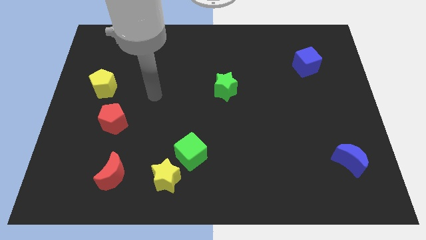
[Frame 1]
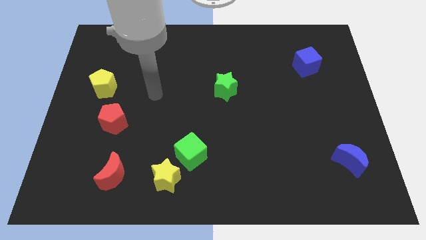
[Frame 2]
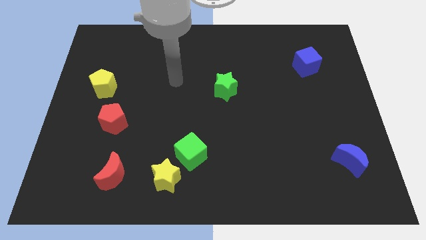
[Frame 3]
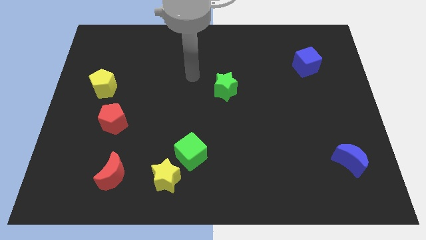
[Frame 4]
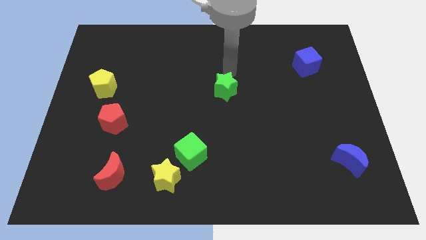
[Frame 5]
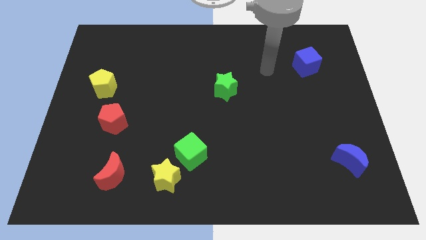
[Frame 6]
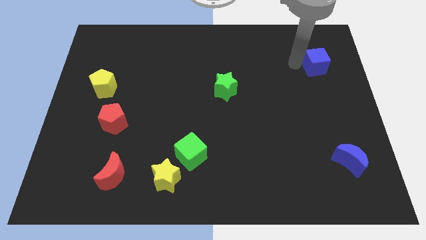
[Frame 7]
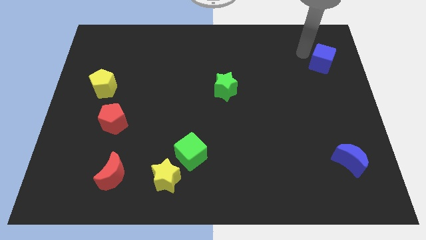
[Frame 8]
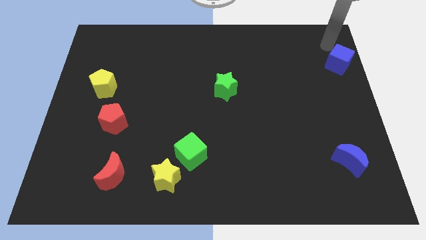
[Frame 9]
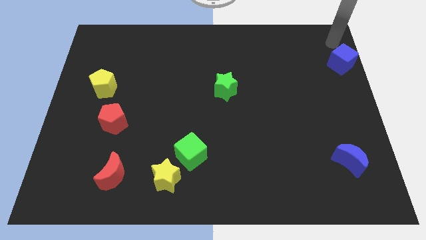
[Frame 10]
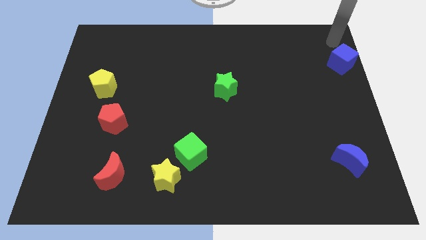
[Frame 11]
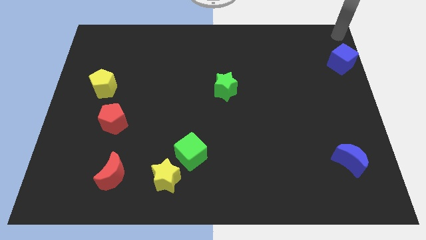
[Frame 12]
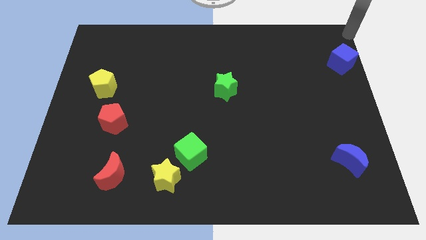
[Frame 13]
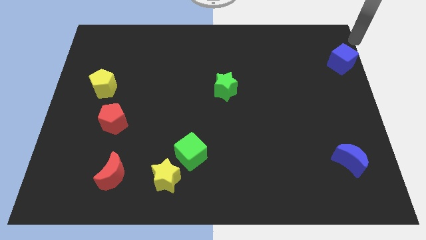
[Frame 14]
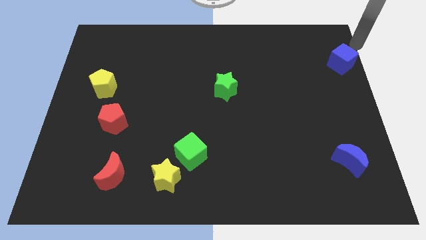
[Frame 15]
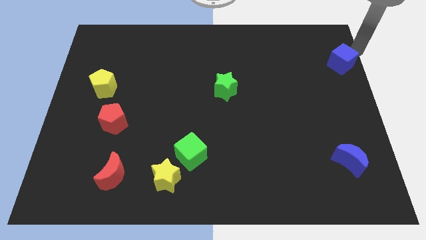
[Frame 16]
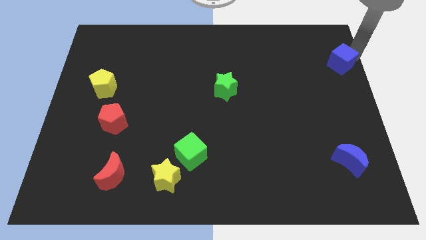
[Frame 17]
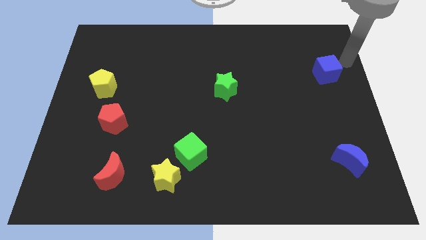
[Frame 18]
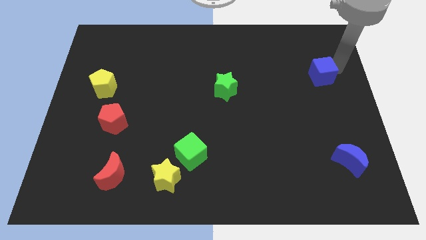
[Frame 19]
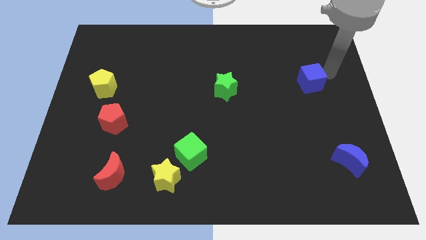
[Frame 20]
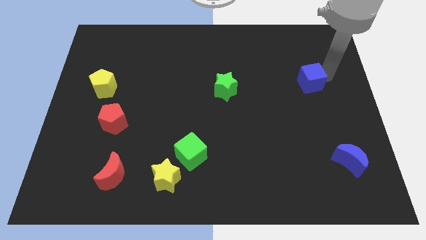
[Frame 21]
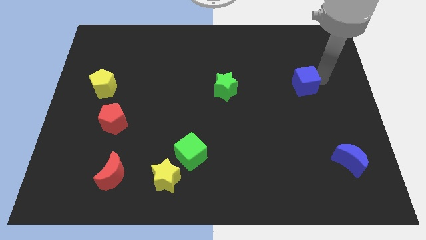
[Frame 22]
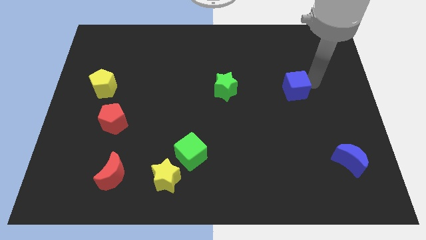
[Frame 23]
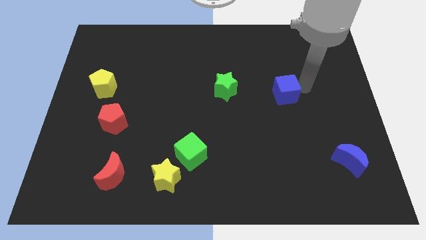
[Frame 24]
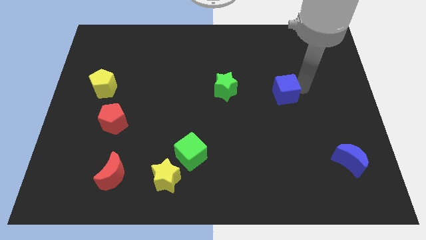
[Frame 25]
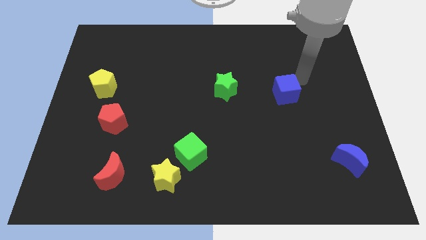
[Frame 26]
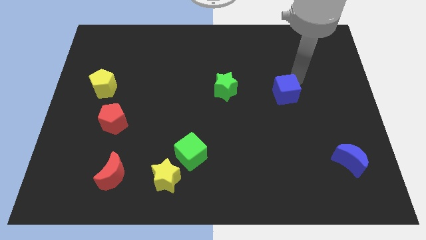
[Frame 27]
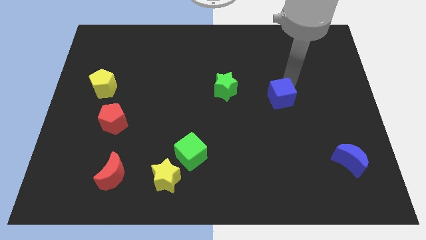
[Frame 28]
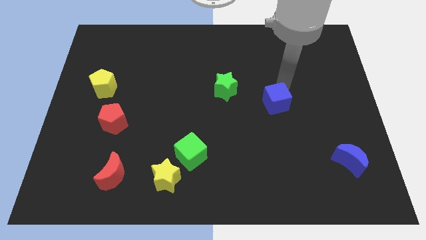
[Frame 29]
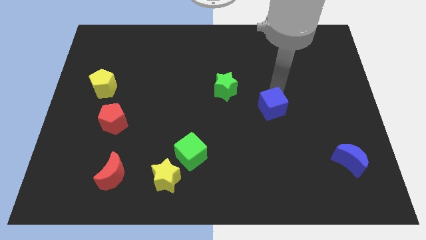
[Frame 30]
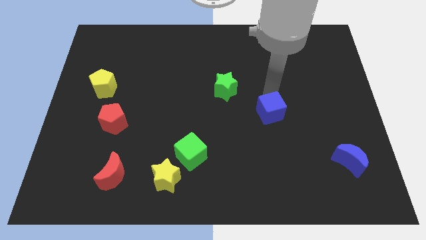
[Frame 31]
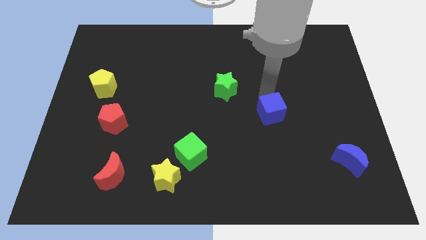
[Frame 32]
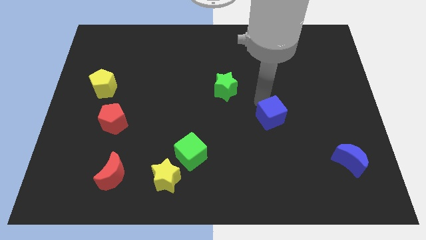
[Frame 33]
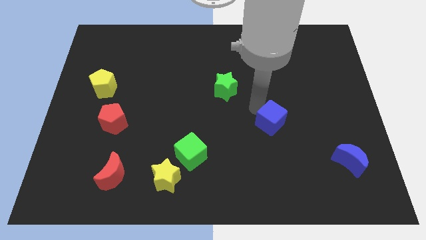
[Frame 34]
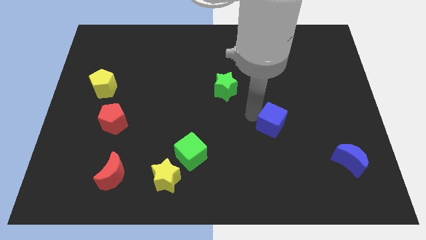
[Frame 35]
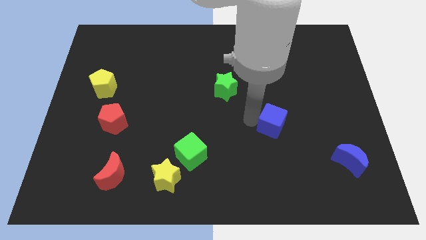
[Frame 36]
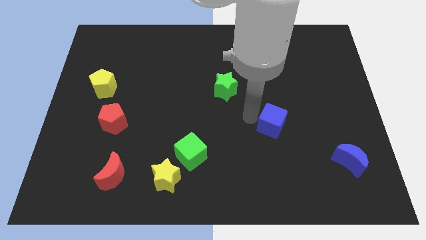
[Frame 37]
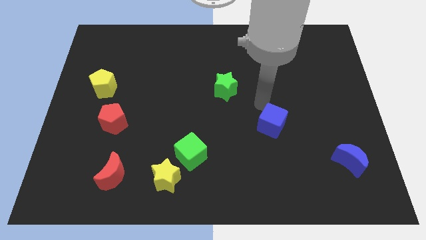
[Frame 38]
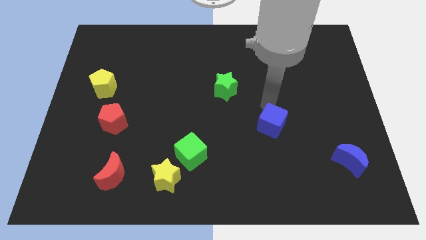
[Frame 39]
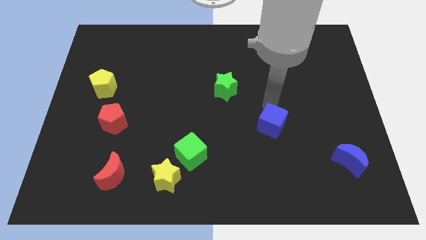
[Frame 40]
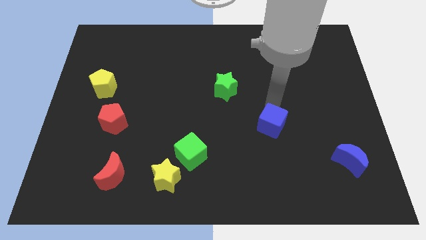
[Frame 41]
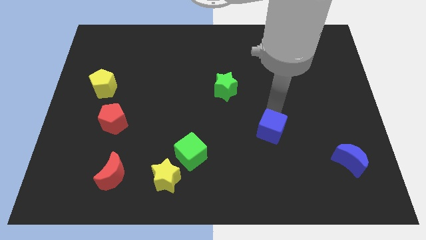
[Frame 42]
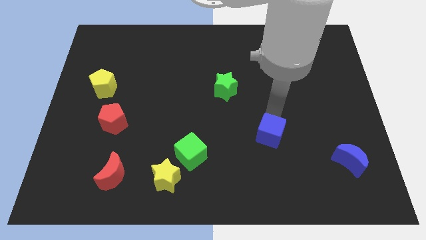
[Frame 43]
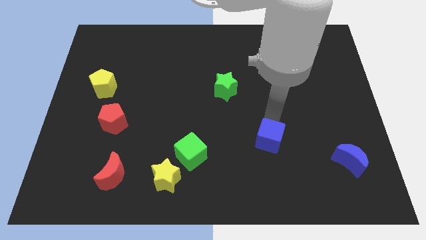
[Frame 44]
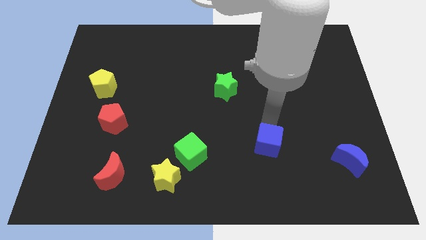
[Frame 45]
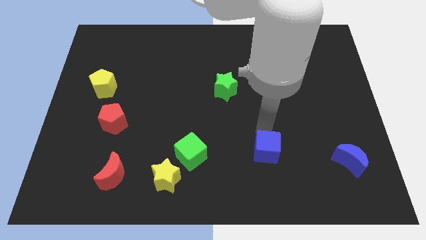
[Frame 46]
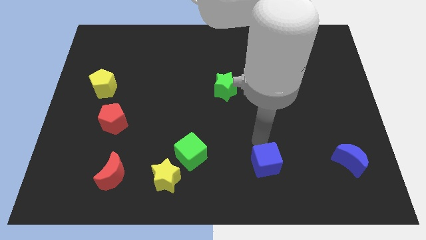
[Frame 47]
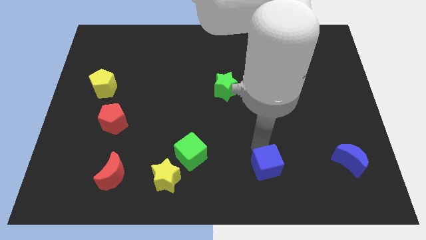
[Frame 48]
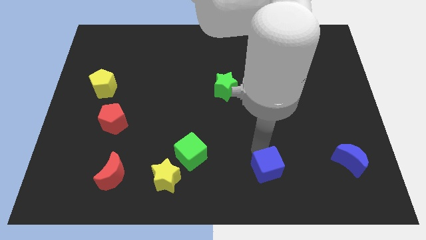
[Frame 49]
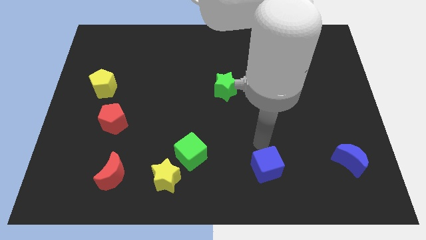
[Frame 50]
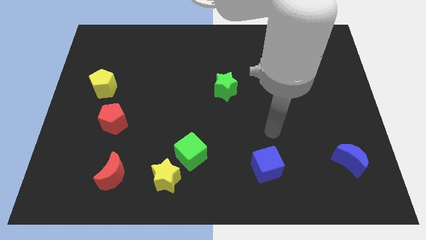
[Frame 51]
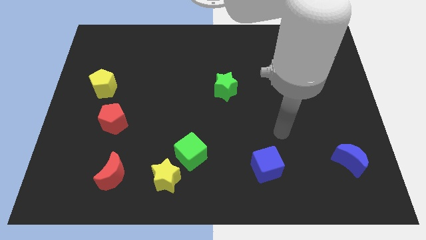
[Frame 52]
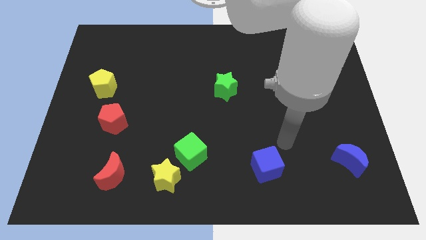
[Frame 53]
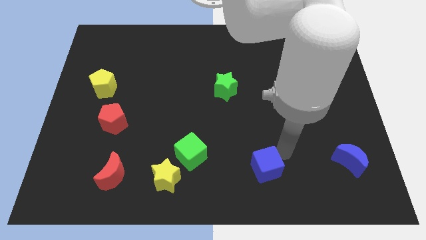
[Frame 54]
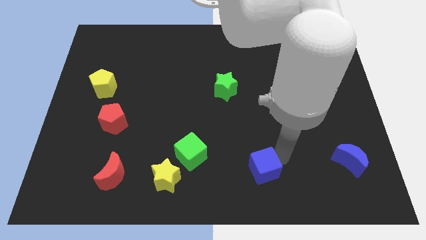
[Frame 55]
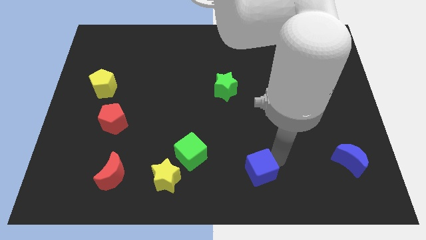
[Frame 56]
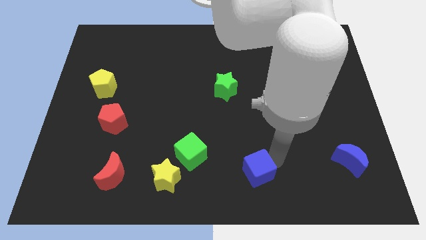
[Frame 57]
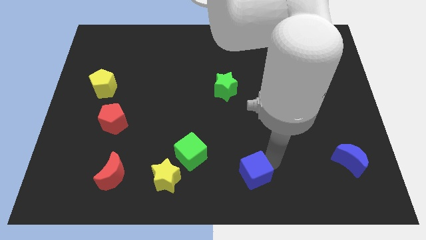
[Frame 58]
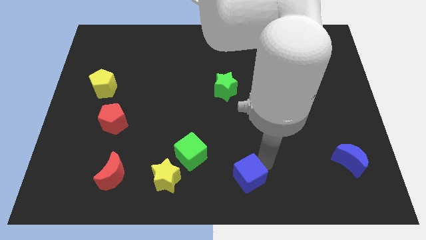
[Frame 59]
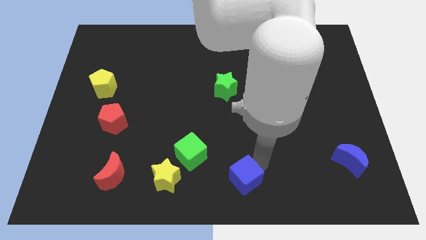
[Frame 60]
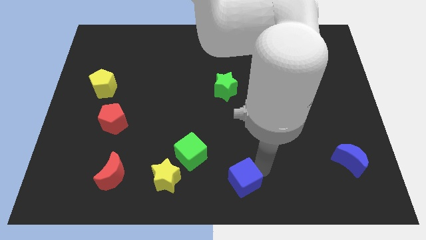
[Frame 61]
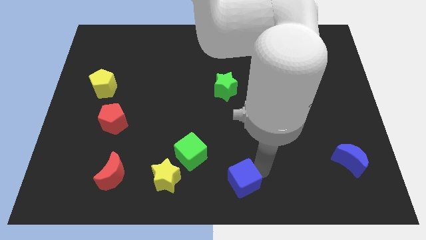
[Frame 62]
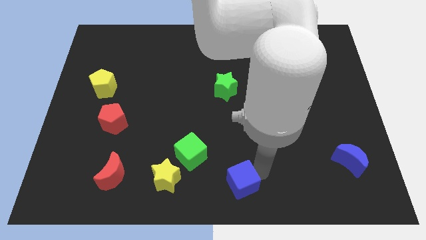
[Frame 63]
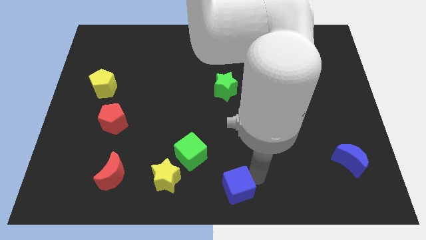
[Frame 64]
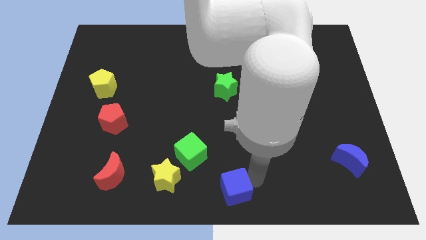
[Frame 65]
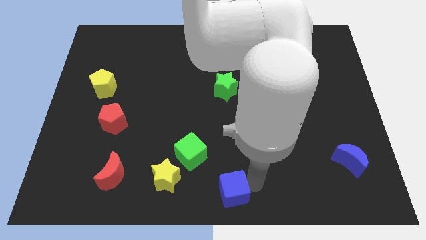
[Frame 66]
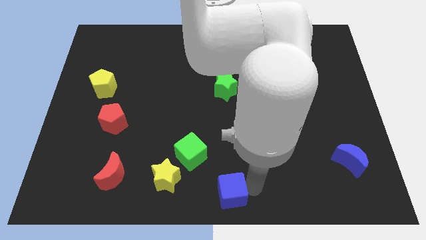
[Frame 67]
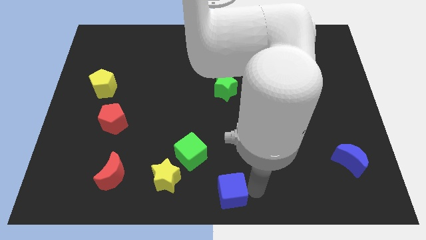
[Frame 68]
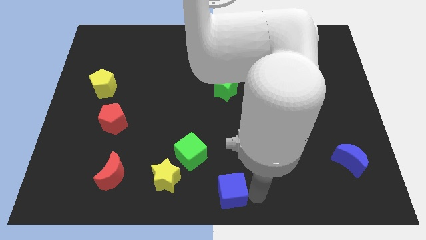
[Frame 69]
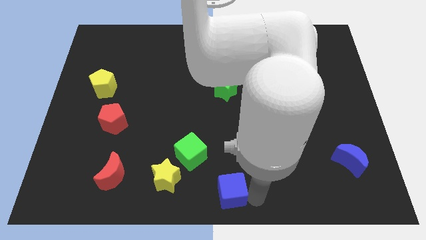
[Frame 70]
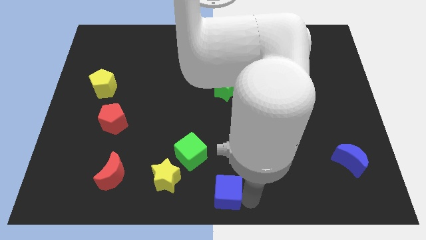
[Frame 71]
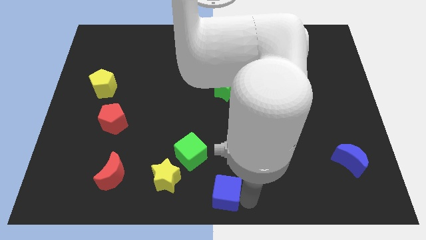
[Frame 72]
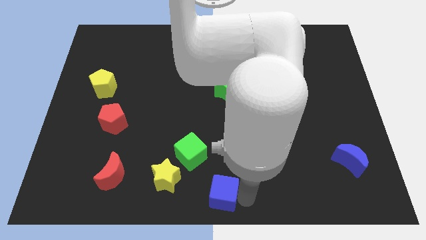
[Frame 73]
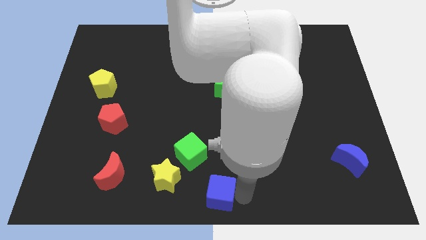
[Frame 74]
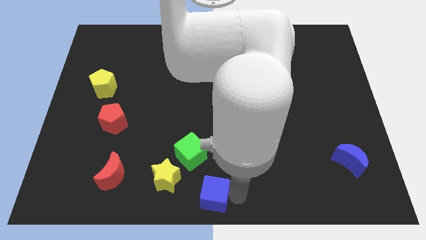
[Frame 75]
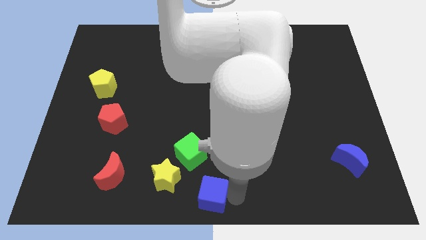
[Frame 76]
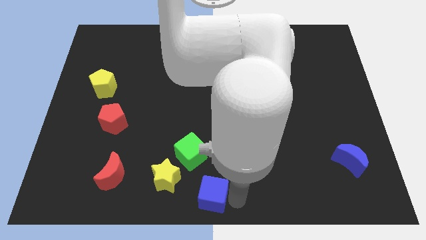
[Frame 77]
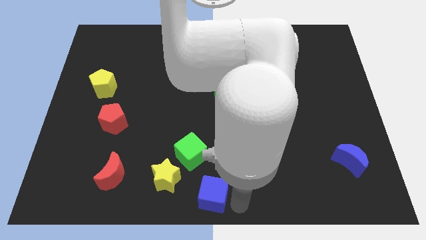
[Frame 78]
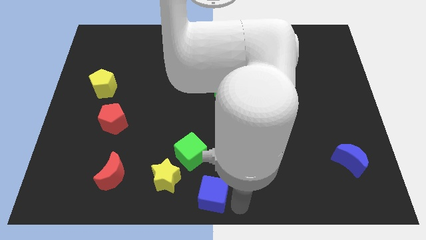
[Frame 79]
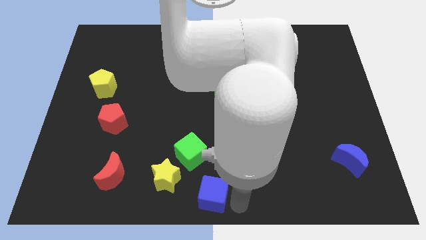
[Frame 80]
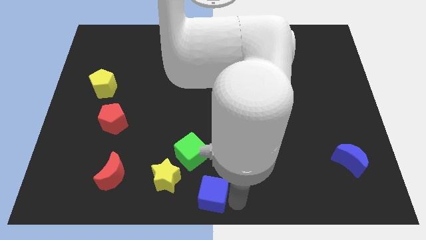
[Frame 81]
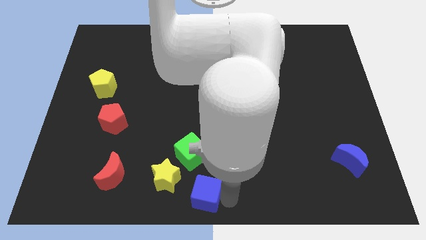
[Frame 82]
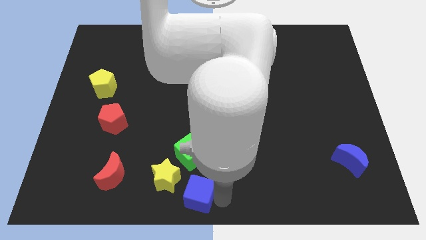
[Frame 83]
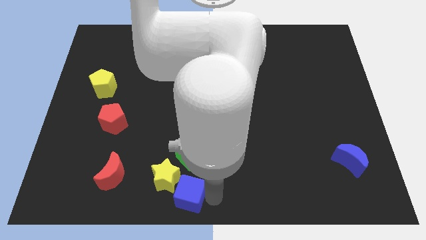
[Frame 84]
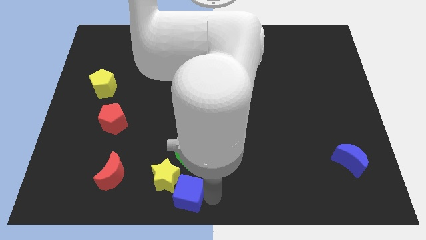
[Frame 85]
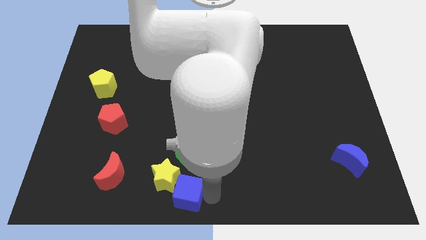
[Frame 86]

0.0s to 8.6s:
move the blue cube to the yellow star
